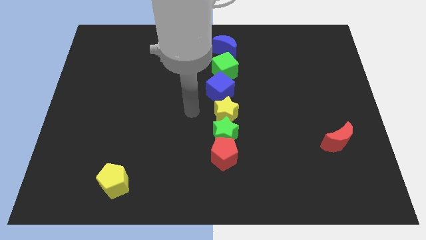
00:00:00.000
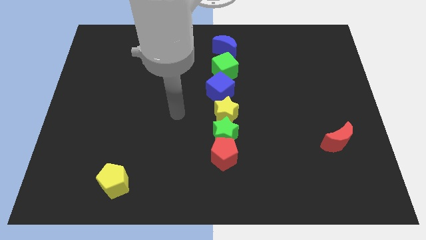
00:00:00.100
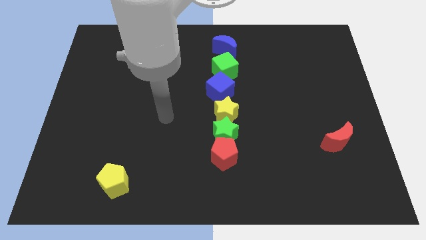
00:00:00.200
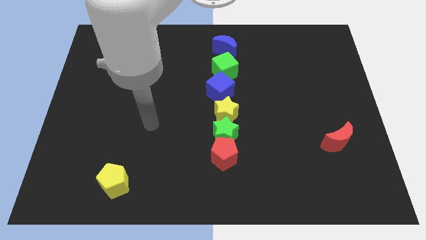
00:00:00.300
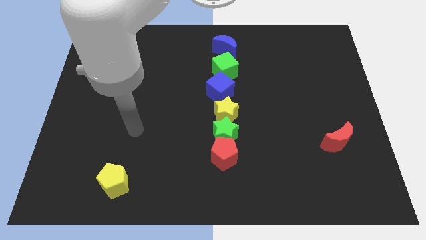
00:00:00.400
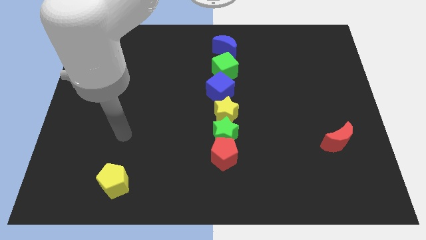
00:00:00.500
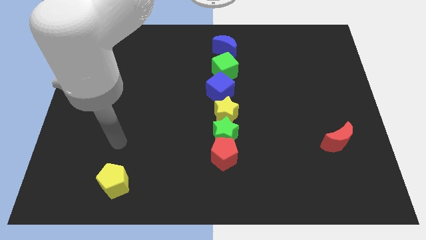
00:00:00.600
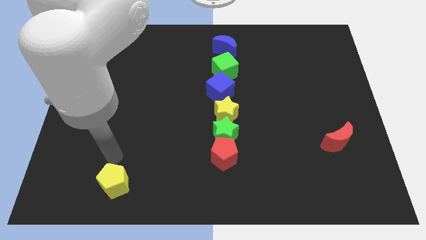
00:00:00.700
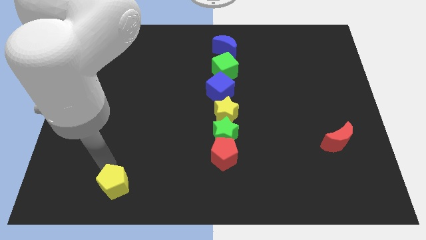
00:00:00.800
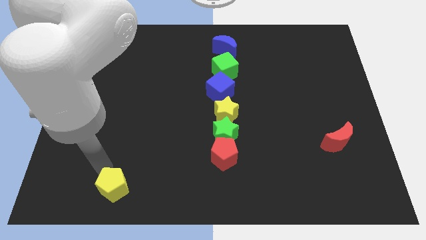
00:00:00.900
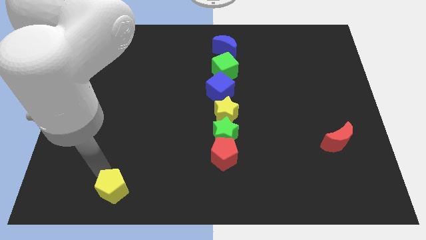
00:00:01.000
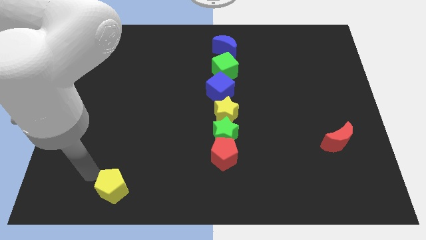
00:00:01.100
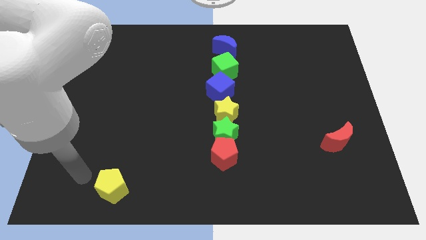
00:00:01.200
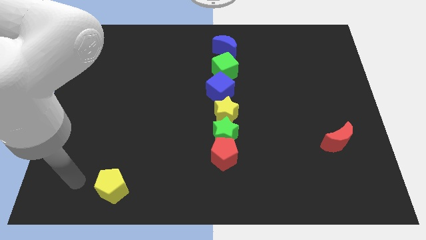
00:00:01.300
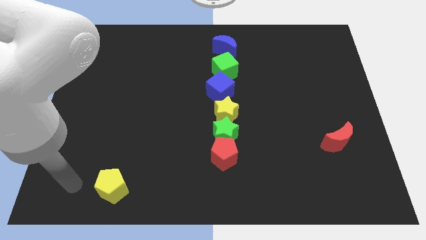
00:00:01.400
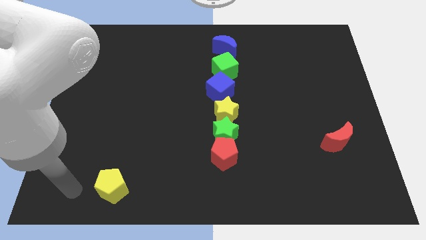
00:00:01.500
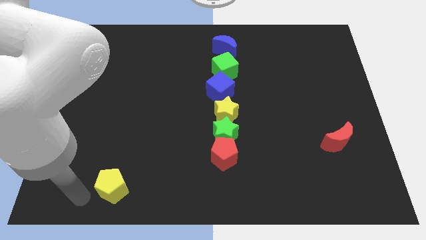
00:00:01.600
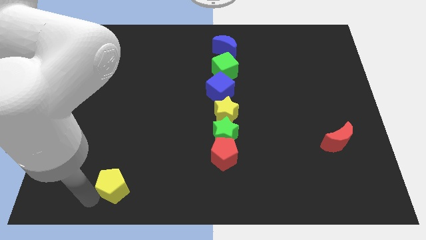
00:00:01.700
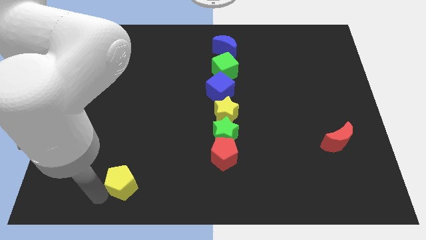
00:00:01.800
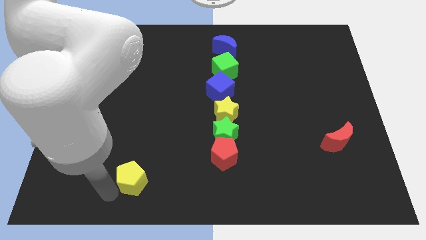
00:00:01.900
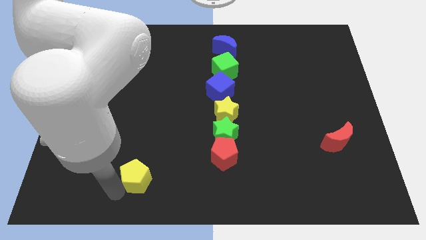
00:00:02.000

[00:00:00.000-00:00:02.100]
move slightly yellow pentagon towards the left side of the red pentagon

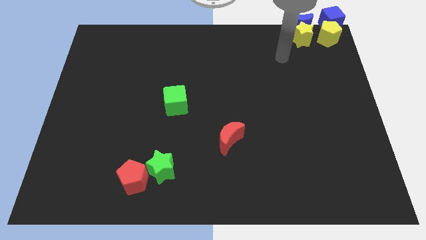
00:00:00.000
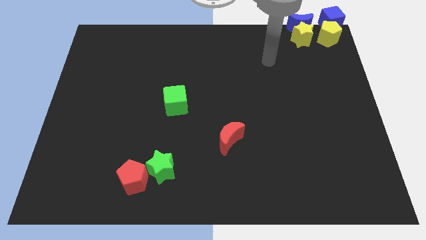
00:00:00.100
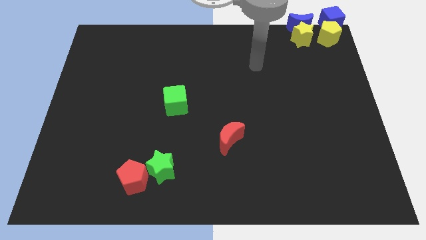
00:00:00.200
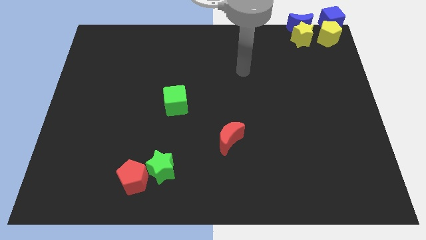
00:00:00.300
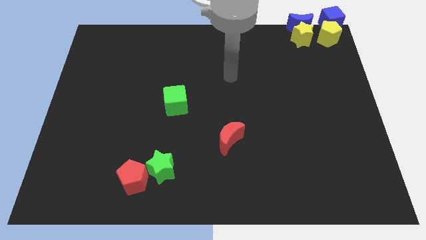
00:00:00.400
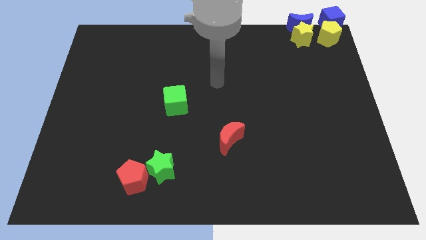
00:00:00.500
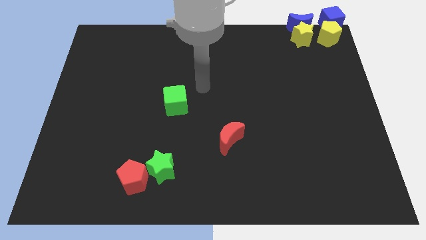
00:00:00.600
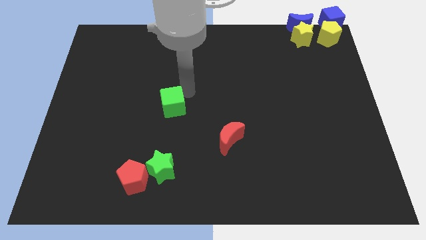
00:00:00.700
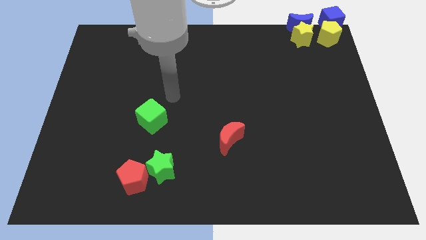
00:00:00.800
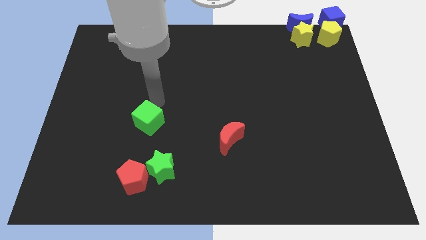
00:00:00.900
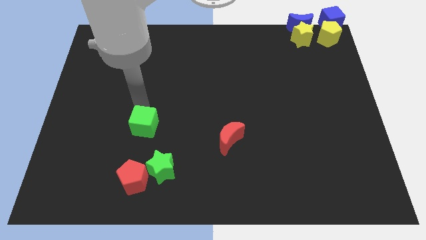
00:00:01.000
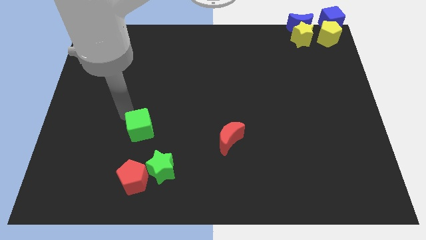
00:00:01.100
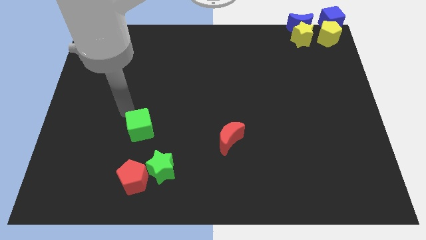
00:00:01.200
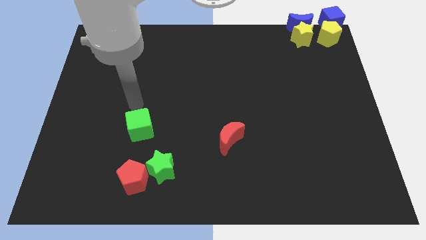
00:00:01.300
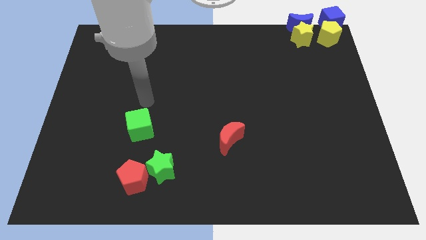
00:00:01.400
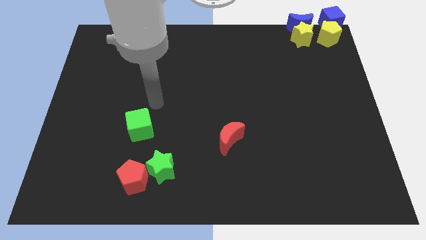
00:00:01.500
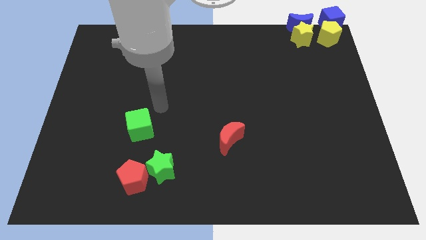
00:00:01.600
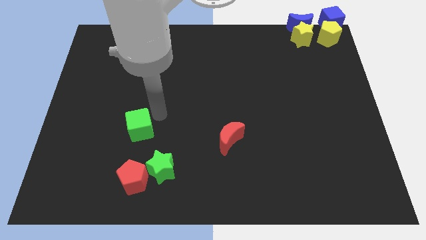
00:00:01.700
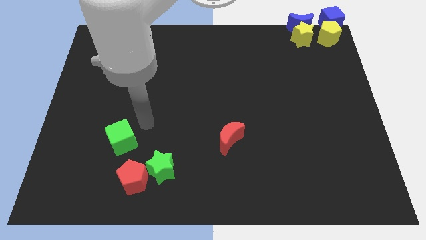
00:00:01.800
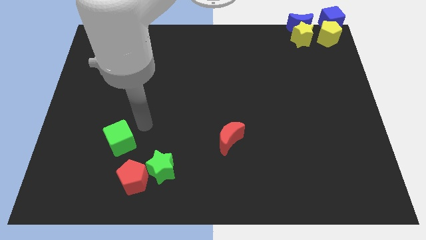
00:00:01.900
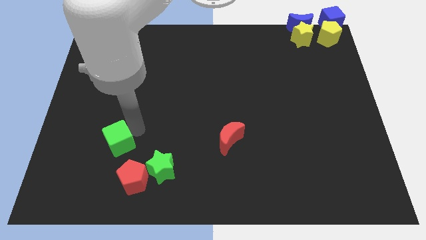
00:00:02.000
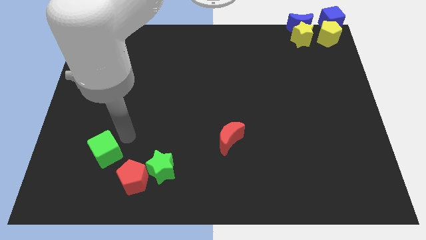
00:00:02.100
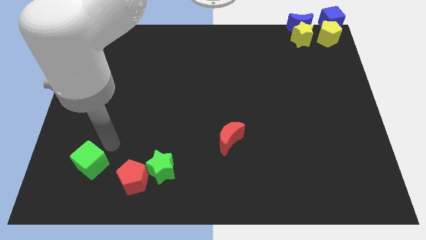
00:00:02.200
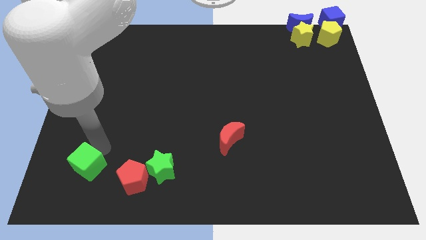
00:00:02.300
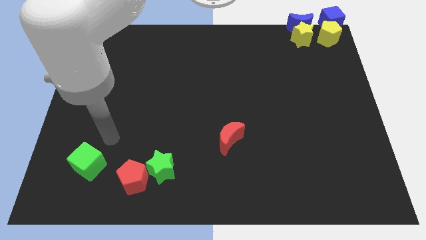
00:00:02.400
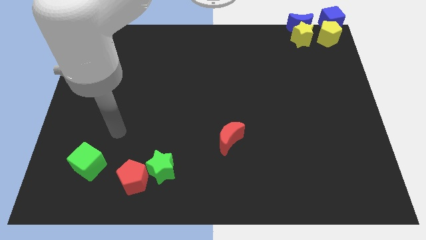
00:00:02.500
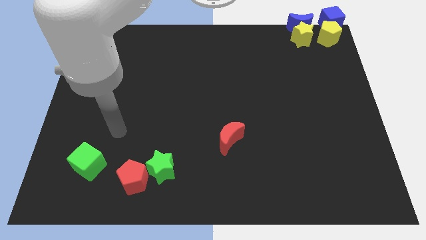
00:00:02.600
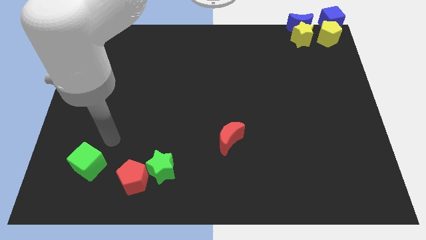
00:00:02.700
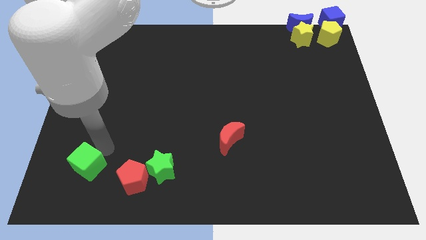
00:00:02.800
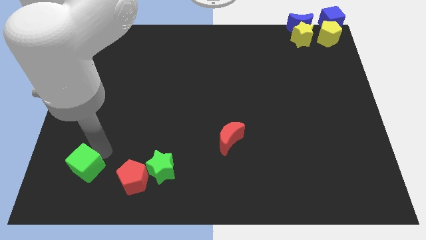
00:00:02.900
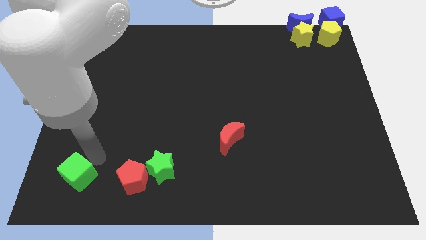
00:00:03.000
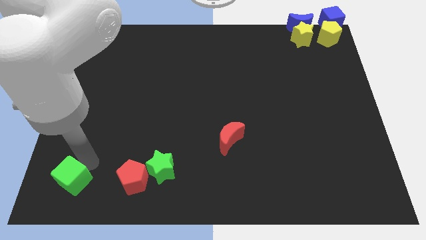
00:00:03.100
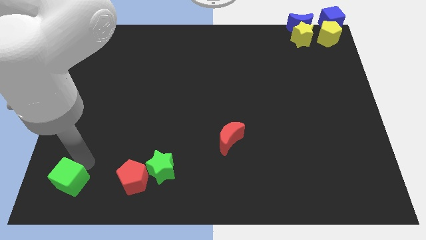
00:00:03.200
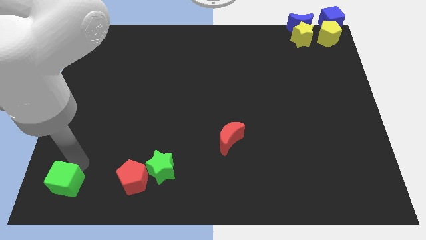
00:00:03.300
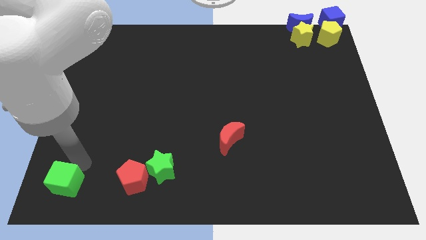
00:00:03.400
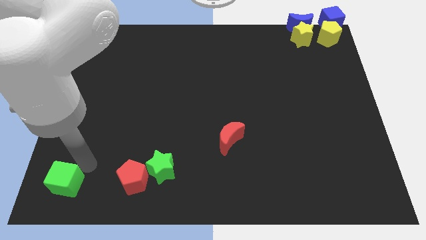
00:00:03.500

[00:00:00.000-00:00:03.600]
move the green cube to the left of the red pentagon

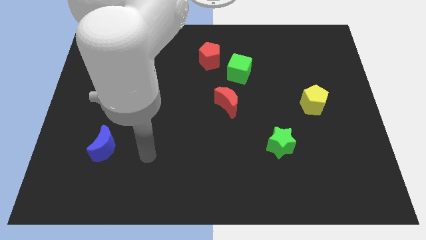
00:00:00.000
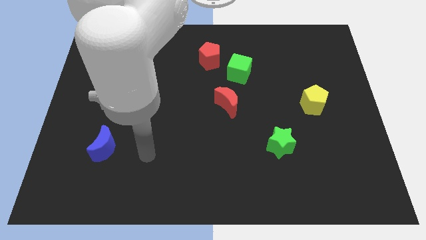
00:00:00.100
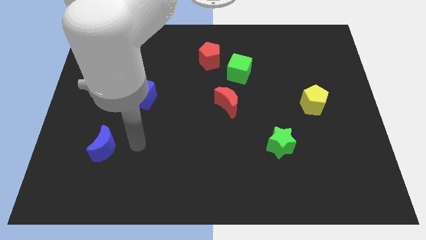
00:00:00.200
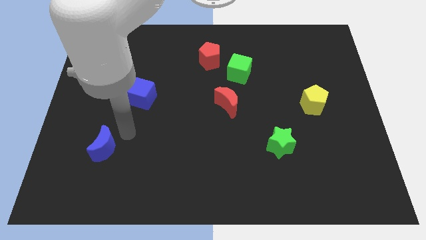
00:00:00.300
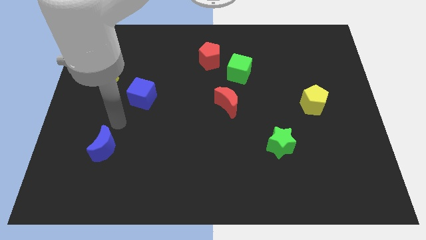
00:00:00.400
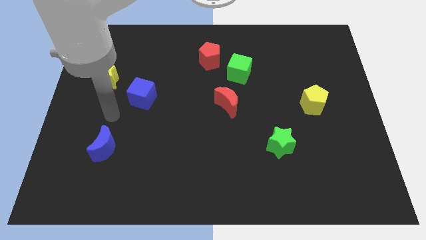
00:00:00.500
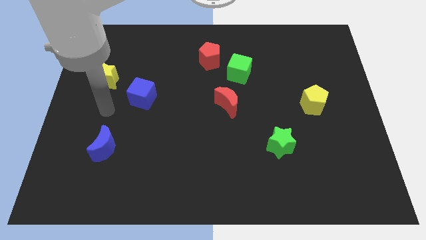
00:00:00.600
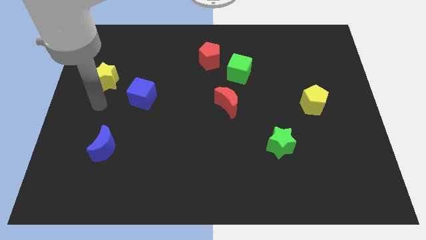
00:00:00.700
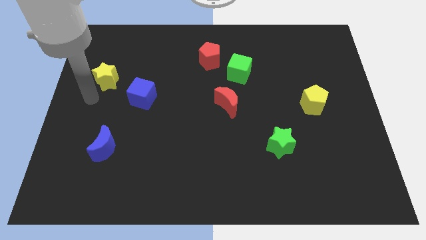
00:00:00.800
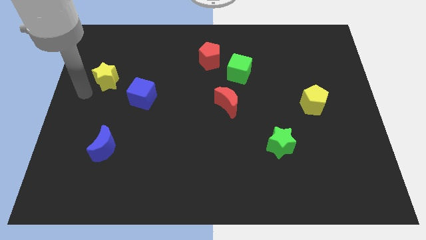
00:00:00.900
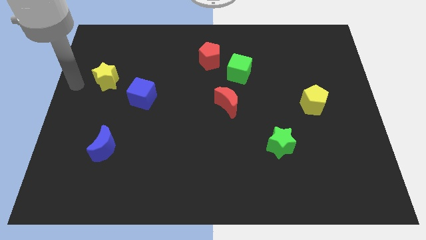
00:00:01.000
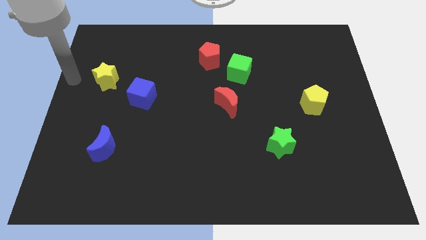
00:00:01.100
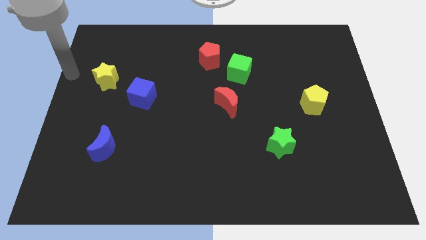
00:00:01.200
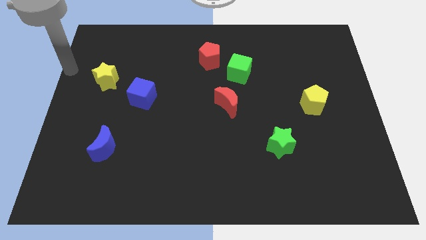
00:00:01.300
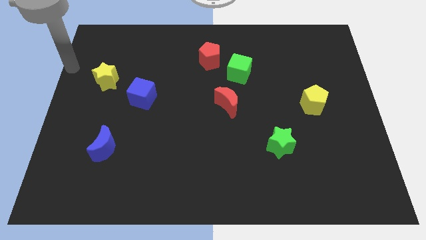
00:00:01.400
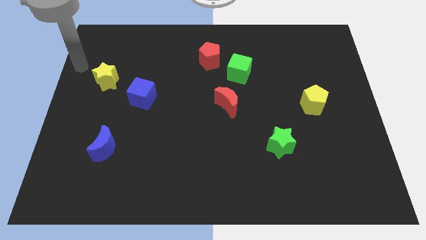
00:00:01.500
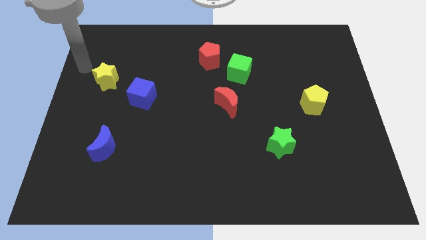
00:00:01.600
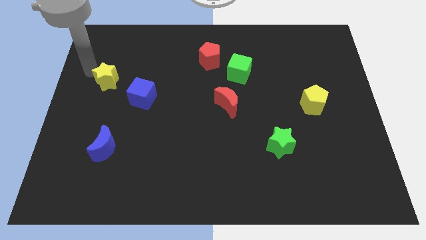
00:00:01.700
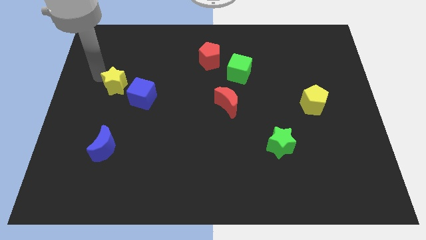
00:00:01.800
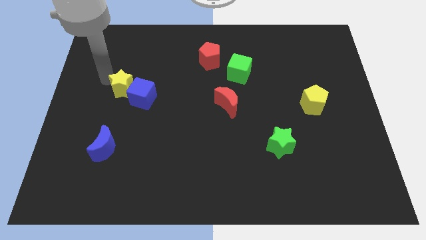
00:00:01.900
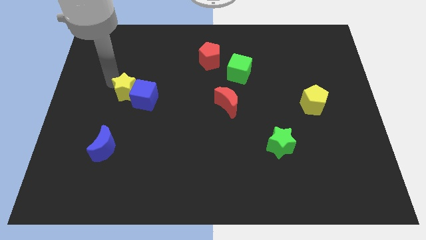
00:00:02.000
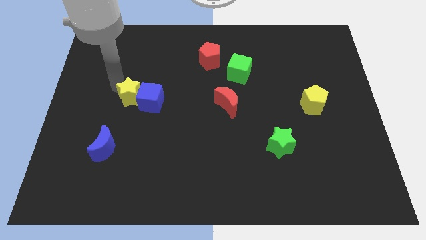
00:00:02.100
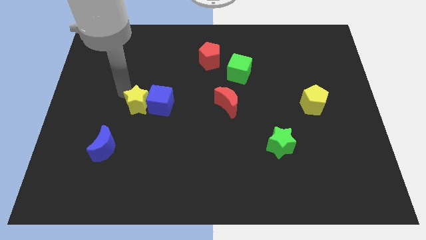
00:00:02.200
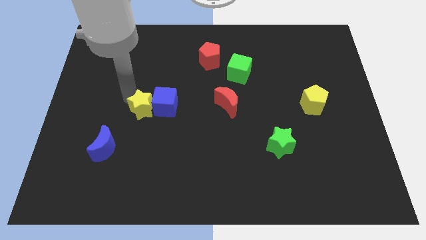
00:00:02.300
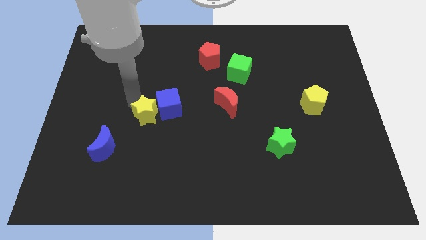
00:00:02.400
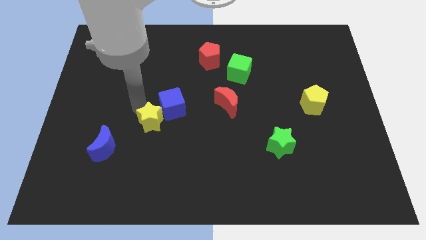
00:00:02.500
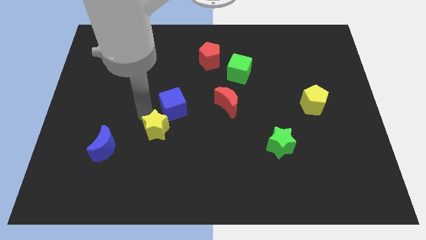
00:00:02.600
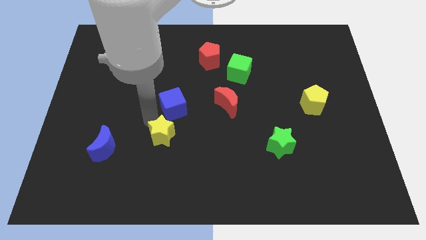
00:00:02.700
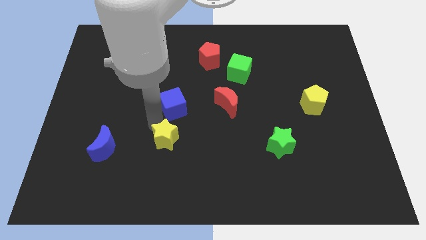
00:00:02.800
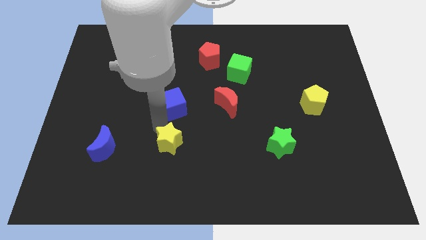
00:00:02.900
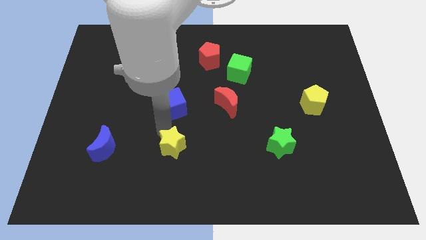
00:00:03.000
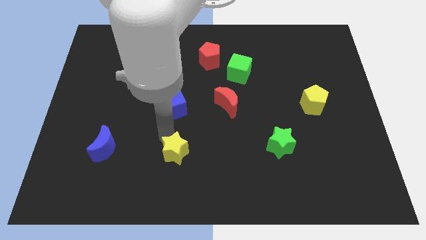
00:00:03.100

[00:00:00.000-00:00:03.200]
push the yellow star horizontally to the right side of the blue moon

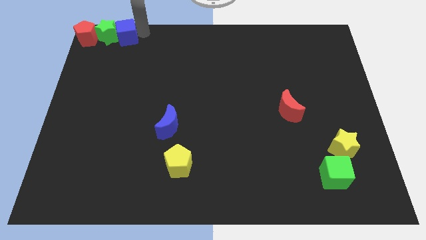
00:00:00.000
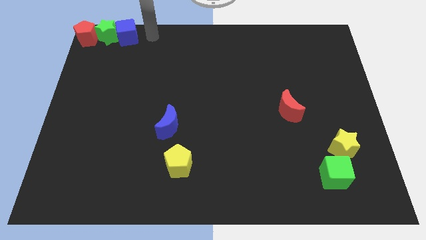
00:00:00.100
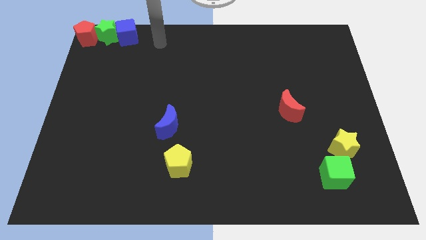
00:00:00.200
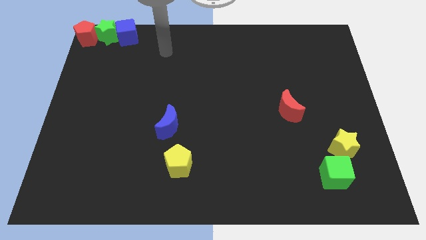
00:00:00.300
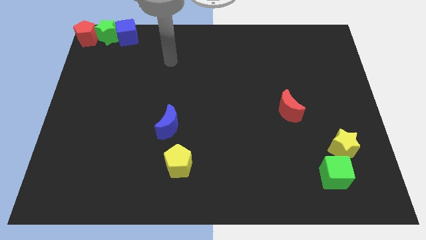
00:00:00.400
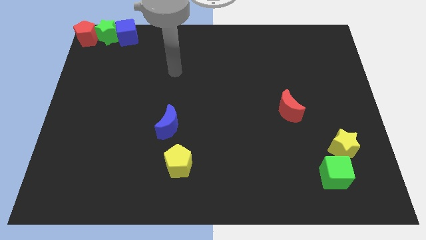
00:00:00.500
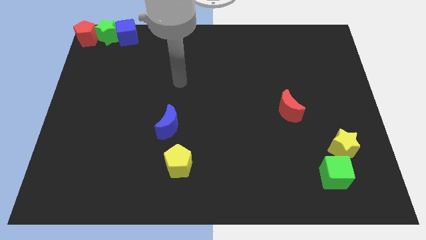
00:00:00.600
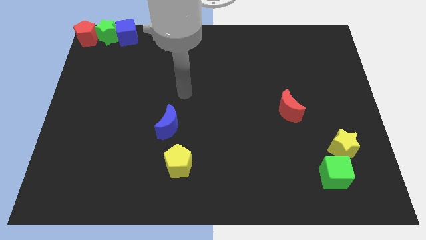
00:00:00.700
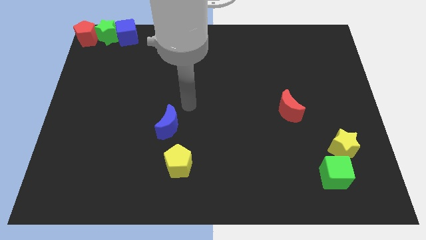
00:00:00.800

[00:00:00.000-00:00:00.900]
move your arm away from blue cube
